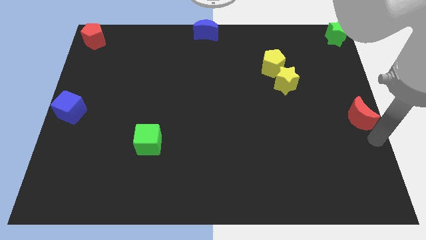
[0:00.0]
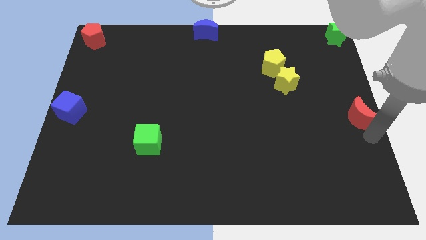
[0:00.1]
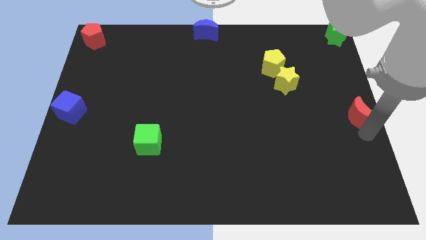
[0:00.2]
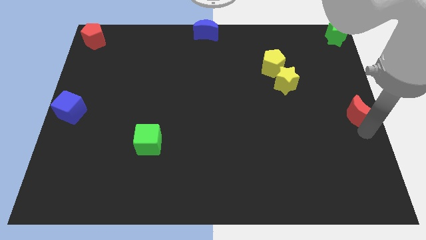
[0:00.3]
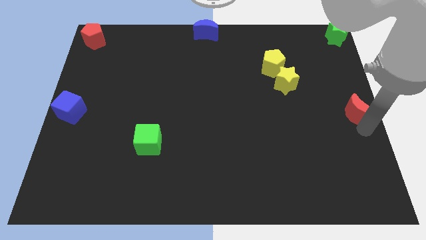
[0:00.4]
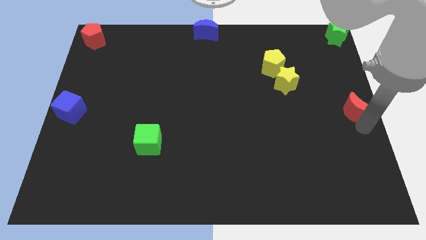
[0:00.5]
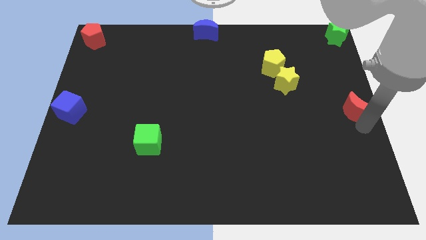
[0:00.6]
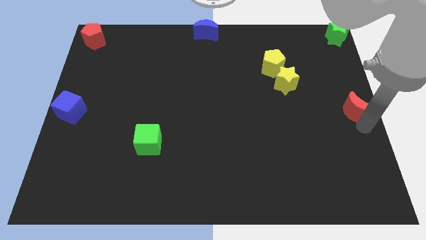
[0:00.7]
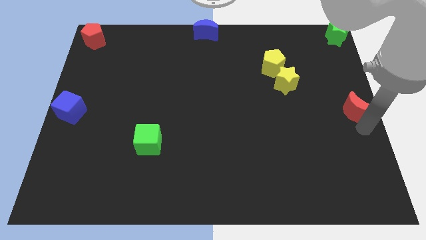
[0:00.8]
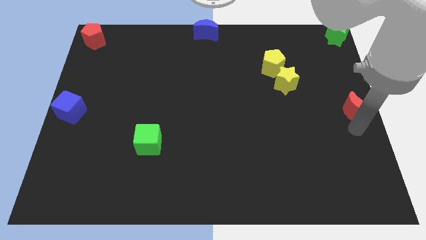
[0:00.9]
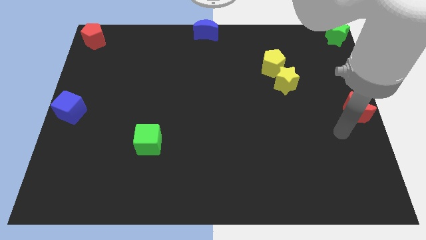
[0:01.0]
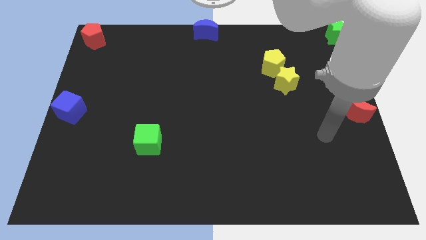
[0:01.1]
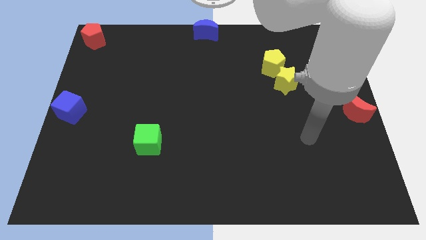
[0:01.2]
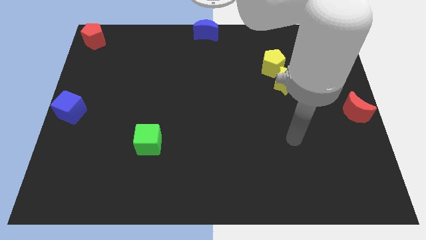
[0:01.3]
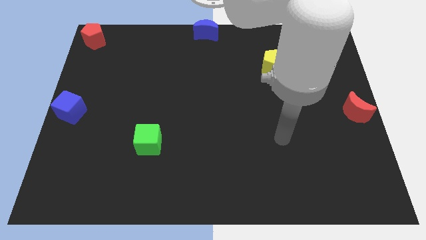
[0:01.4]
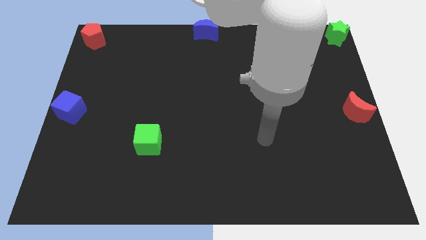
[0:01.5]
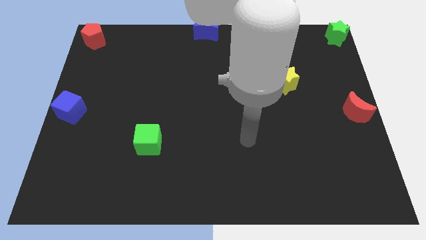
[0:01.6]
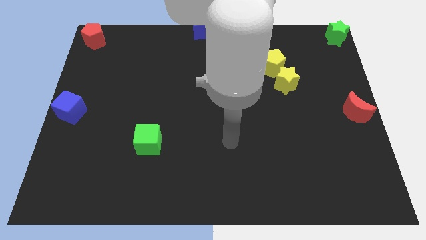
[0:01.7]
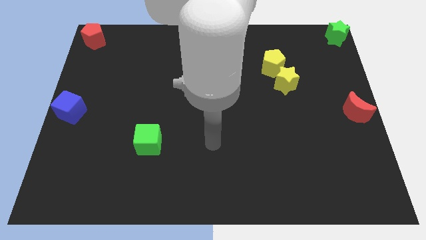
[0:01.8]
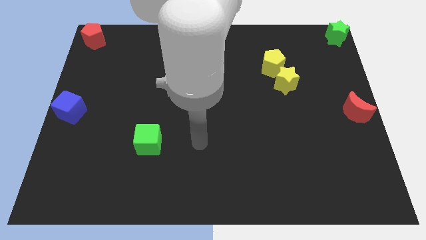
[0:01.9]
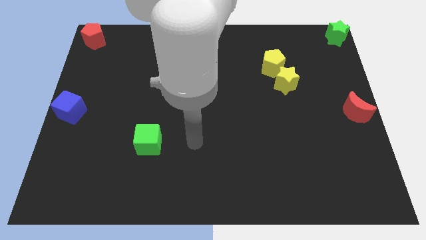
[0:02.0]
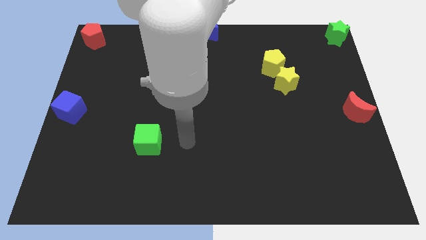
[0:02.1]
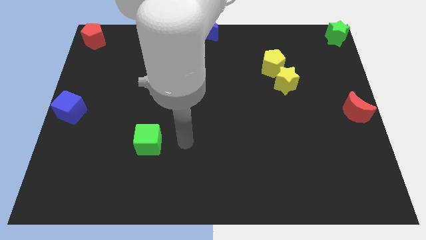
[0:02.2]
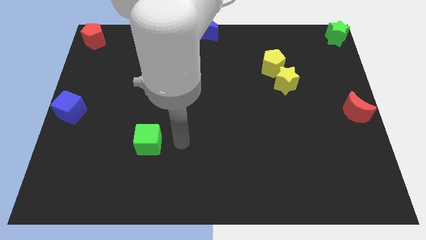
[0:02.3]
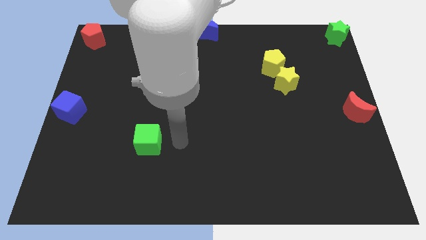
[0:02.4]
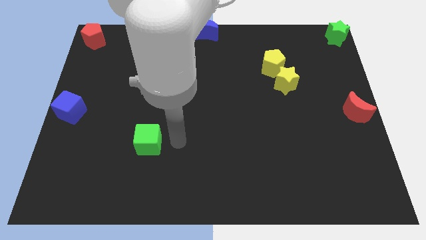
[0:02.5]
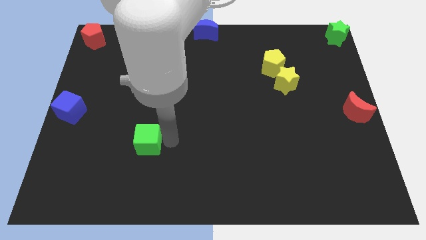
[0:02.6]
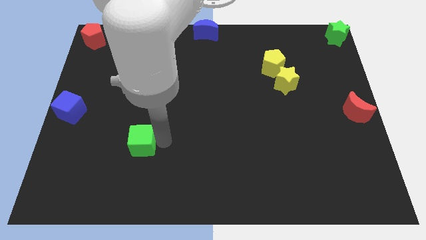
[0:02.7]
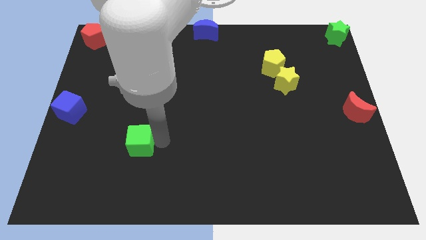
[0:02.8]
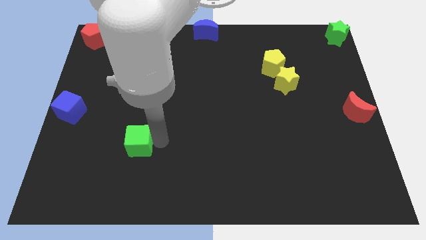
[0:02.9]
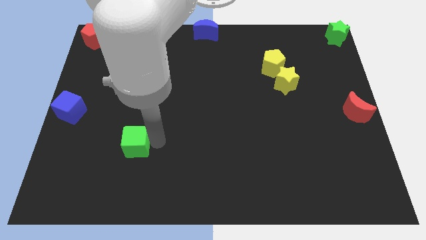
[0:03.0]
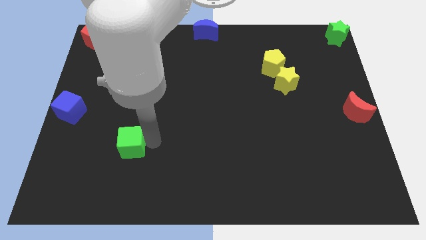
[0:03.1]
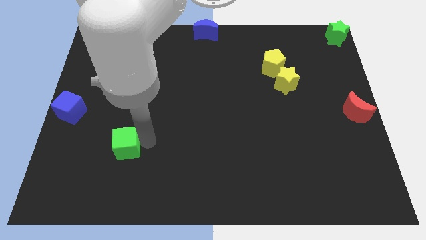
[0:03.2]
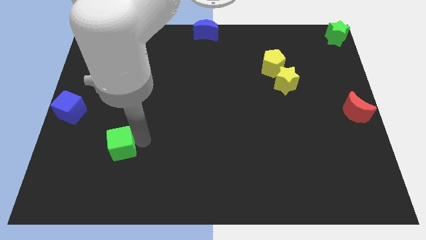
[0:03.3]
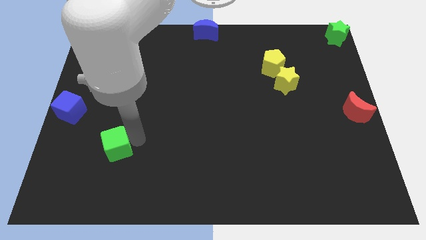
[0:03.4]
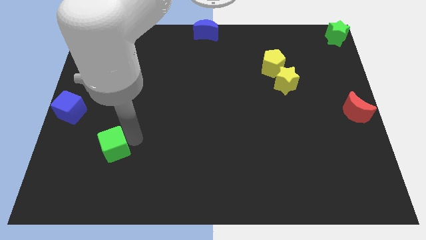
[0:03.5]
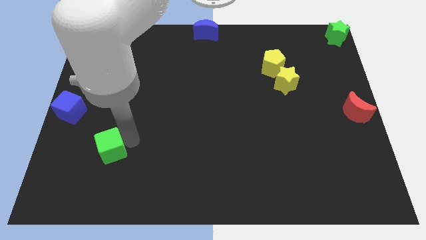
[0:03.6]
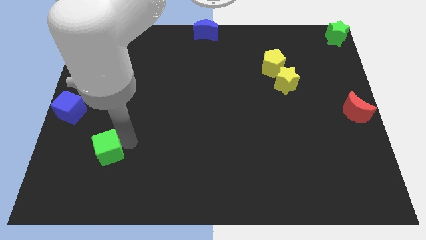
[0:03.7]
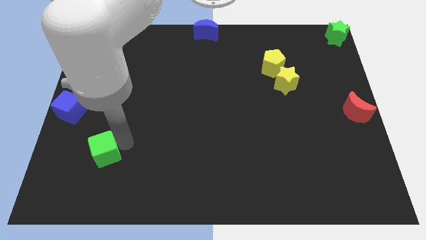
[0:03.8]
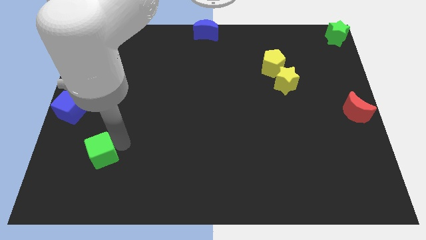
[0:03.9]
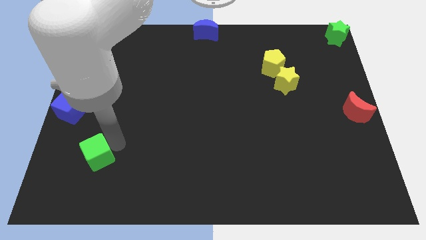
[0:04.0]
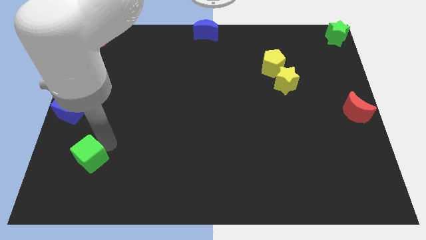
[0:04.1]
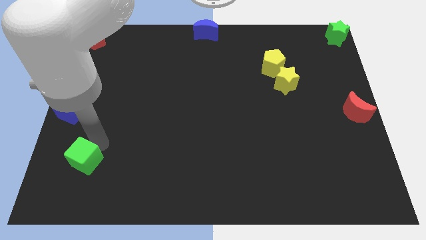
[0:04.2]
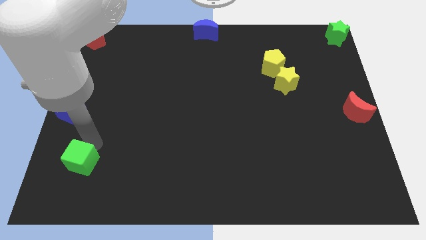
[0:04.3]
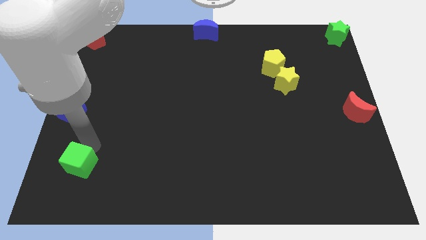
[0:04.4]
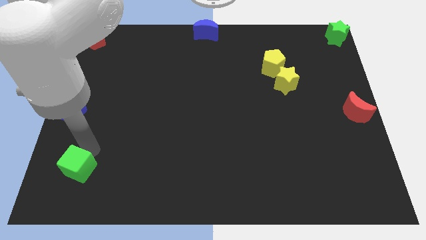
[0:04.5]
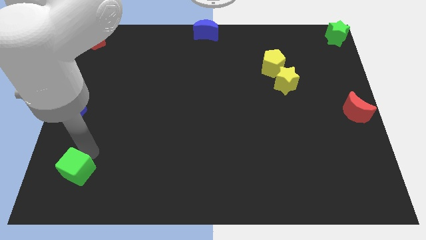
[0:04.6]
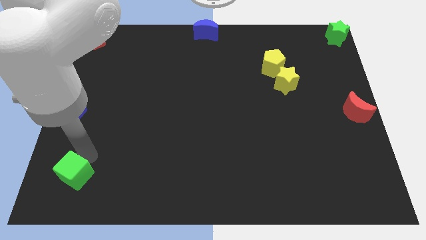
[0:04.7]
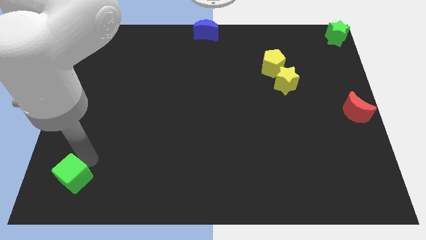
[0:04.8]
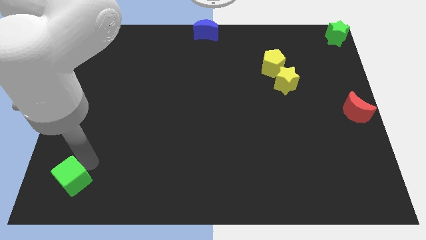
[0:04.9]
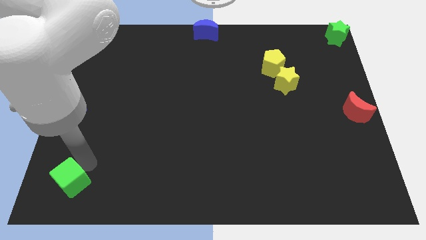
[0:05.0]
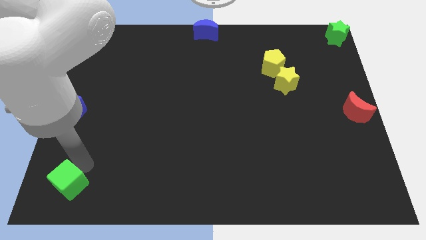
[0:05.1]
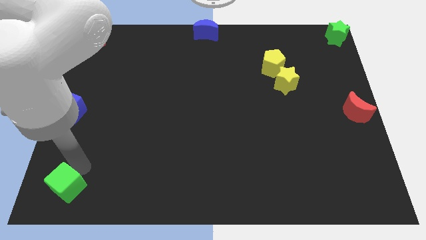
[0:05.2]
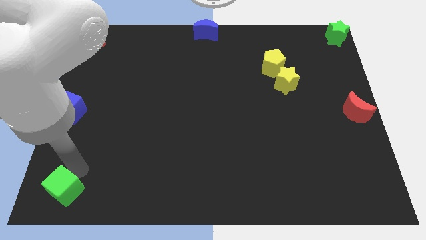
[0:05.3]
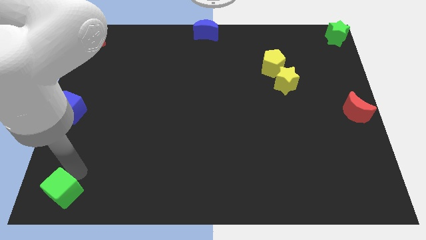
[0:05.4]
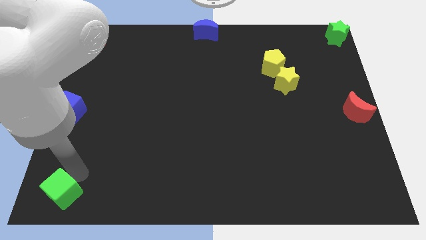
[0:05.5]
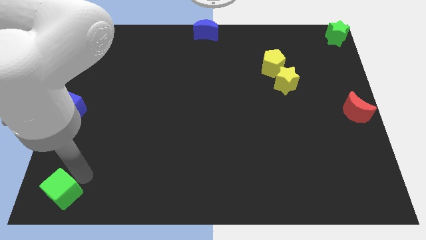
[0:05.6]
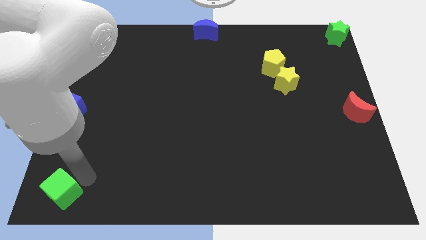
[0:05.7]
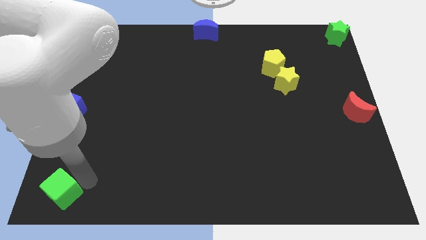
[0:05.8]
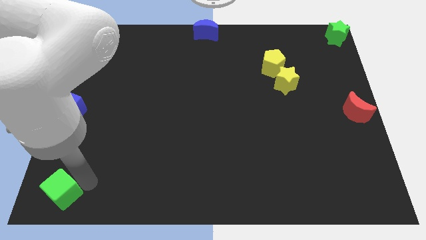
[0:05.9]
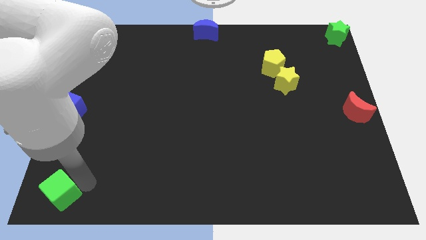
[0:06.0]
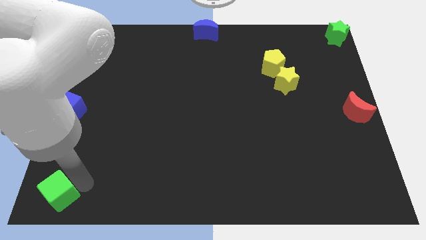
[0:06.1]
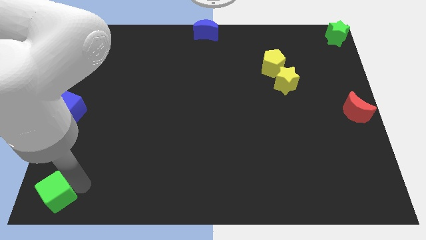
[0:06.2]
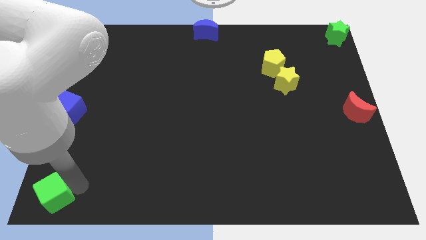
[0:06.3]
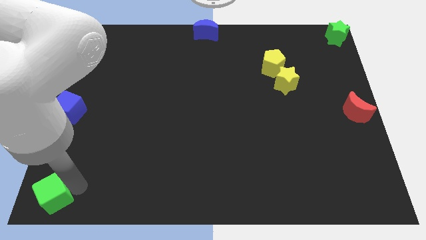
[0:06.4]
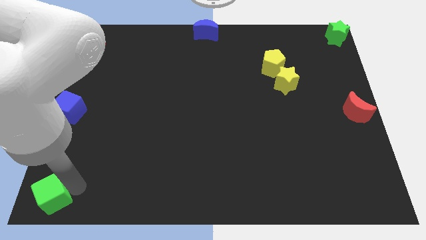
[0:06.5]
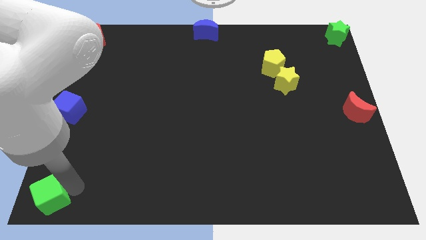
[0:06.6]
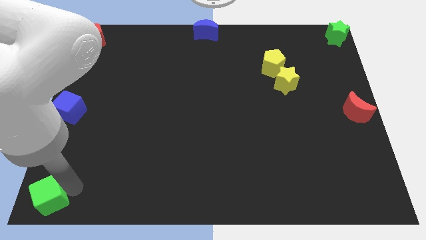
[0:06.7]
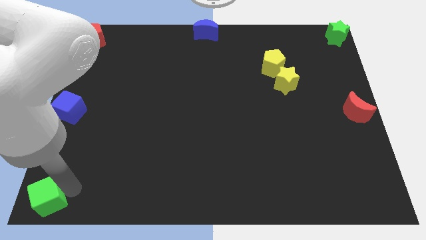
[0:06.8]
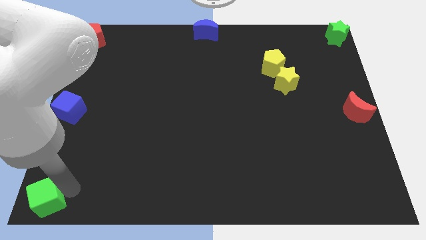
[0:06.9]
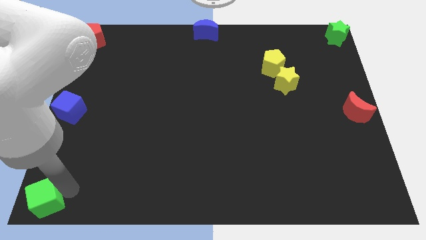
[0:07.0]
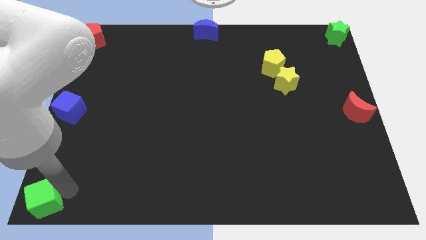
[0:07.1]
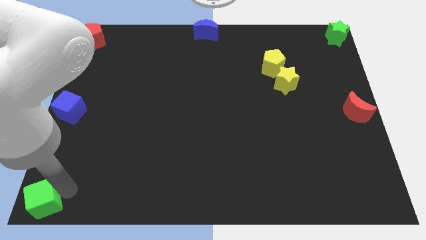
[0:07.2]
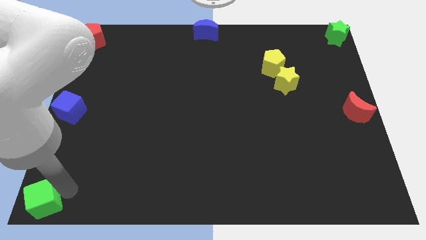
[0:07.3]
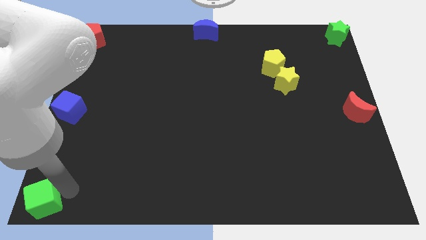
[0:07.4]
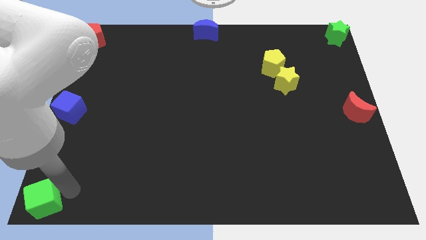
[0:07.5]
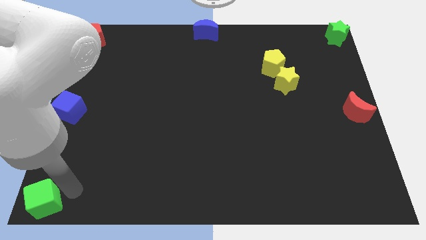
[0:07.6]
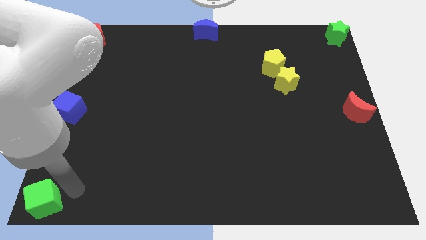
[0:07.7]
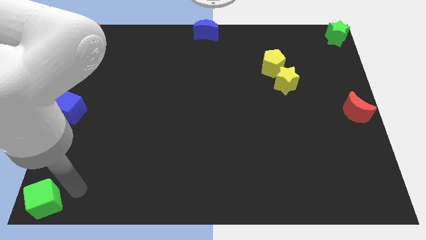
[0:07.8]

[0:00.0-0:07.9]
move the green cube to the bottom left side of the board

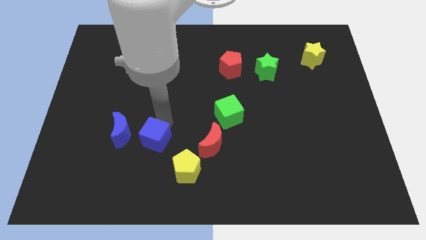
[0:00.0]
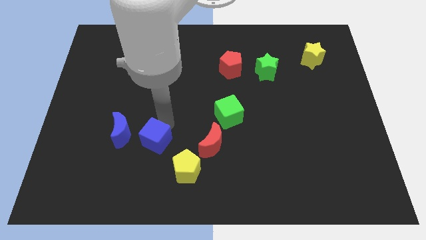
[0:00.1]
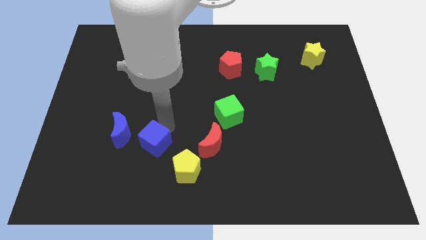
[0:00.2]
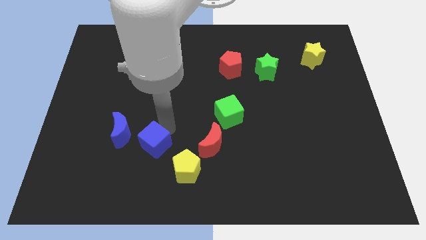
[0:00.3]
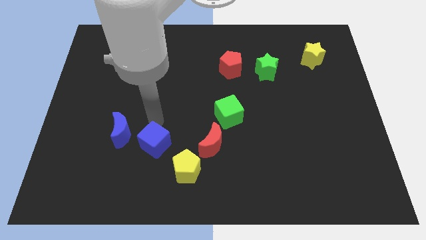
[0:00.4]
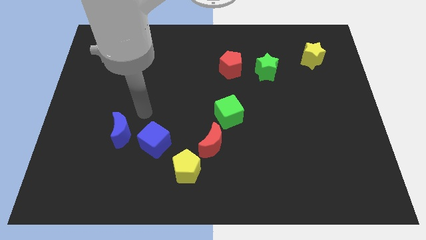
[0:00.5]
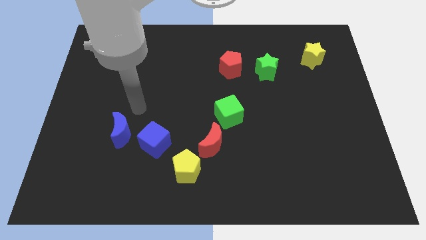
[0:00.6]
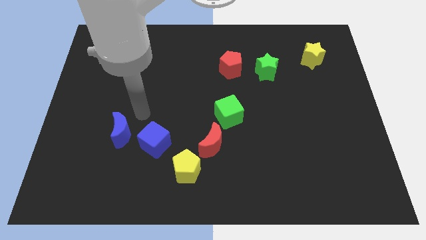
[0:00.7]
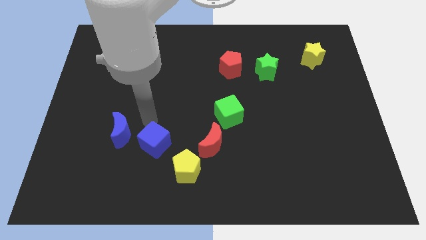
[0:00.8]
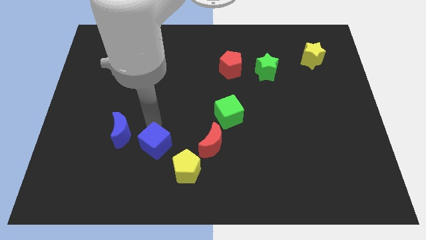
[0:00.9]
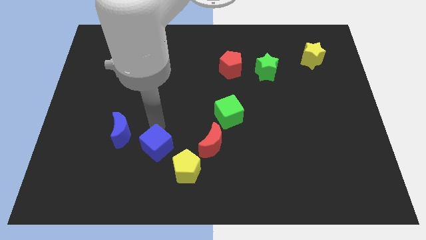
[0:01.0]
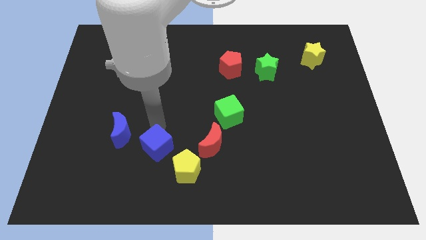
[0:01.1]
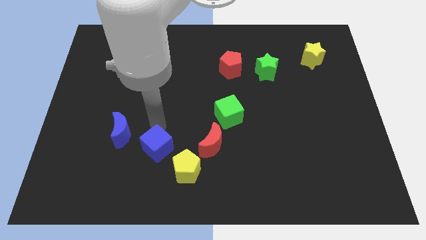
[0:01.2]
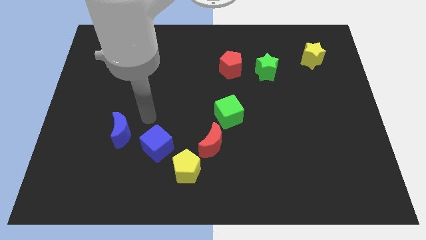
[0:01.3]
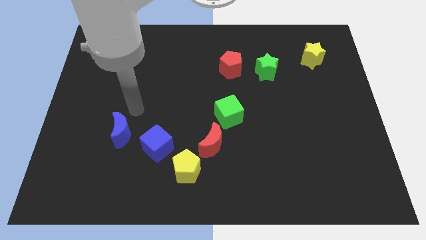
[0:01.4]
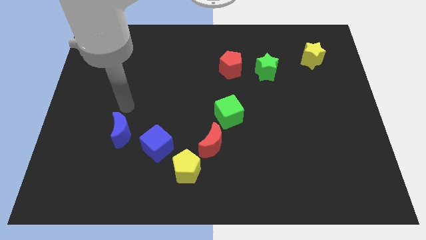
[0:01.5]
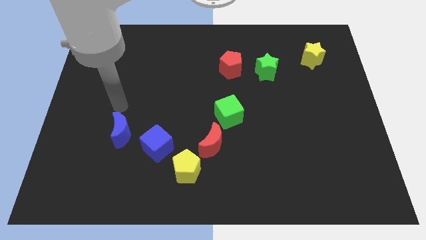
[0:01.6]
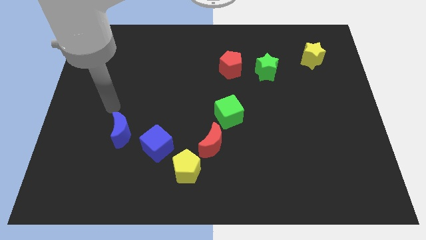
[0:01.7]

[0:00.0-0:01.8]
move the blue cube diagonally on the top left side of the yellow pentagon
